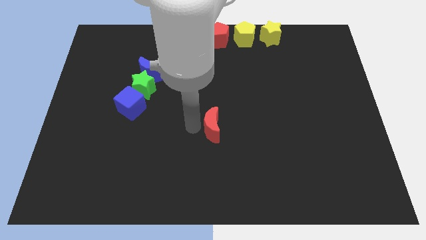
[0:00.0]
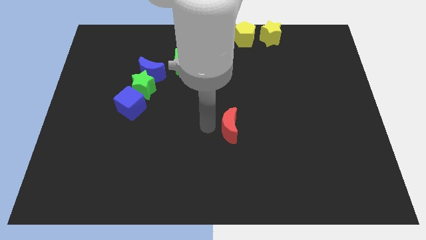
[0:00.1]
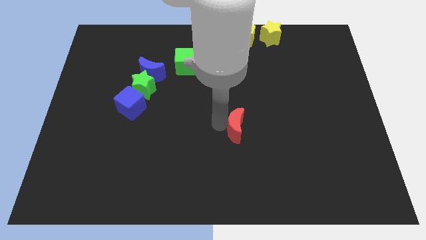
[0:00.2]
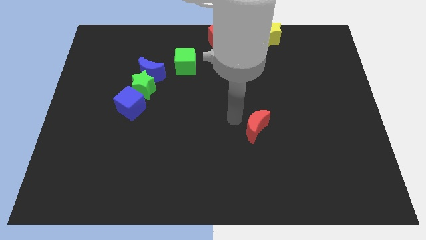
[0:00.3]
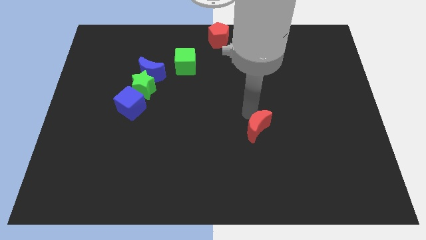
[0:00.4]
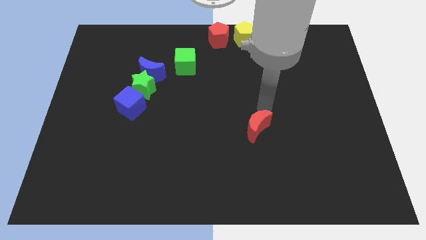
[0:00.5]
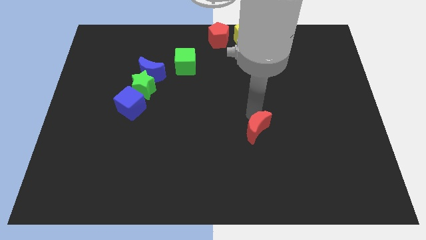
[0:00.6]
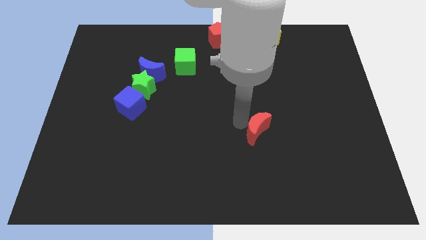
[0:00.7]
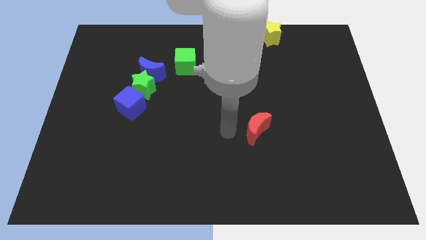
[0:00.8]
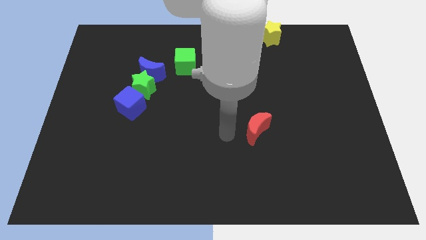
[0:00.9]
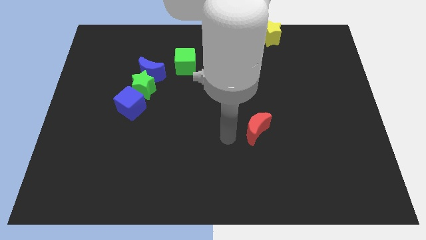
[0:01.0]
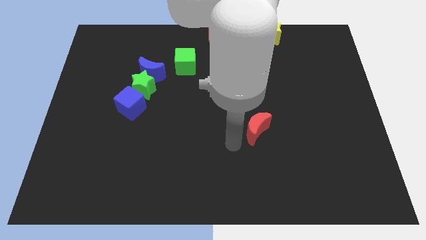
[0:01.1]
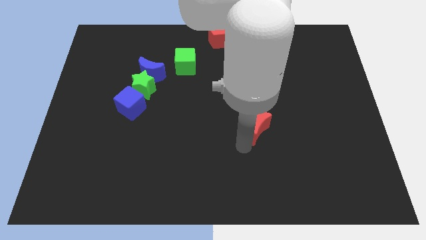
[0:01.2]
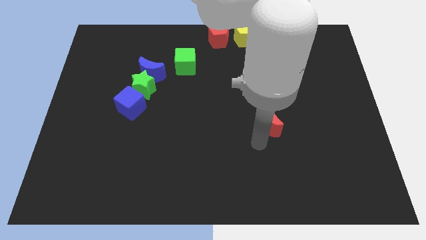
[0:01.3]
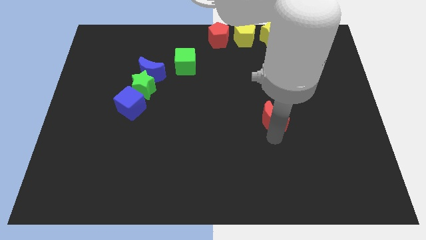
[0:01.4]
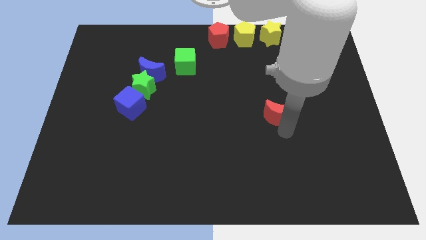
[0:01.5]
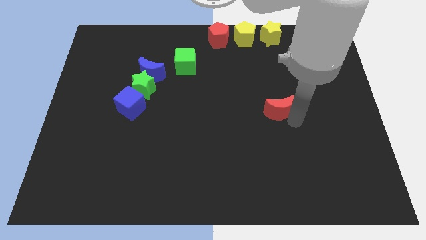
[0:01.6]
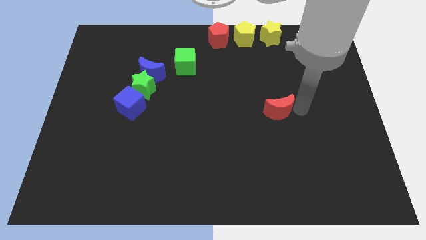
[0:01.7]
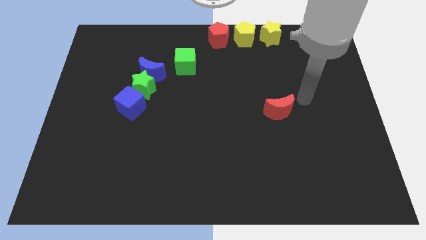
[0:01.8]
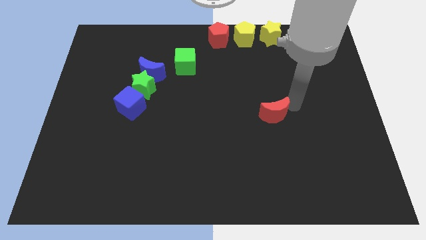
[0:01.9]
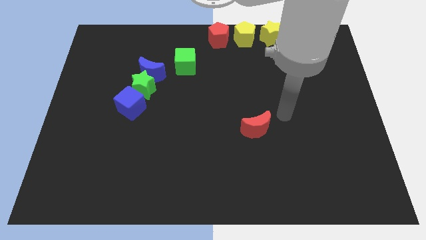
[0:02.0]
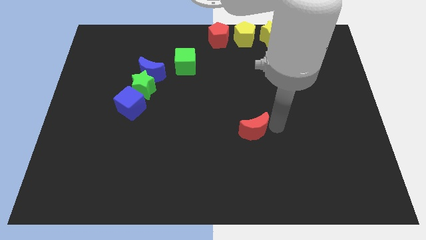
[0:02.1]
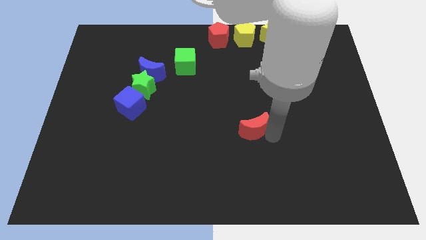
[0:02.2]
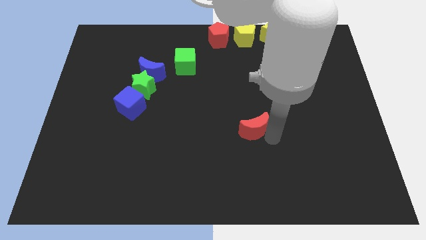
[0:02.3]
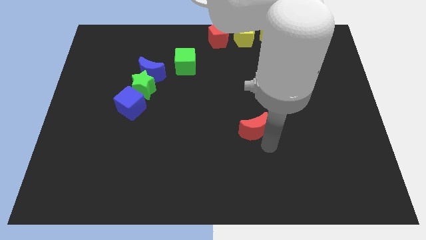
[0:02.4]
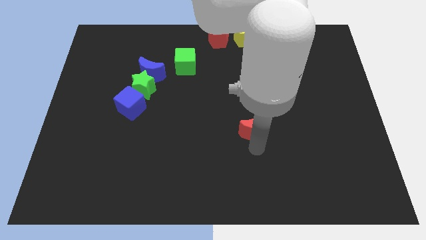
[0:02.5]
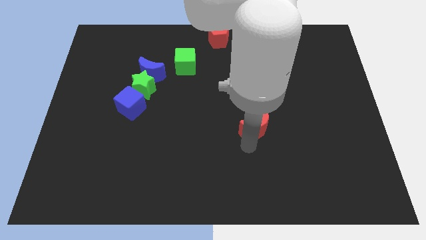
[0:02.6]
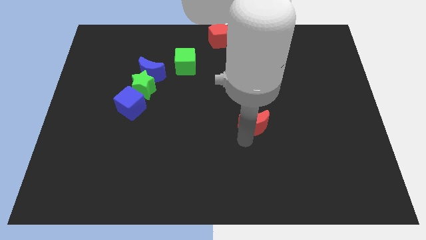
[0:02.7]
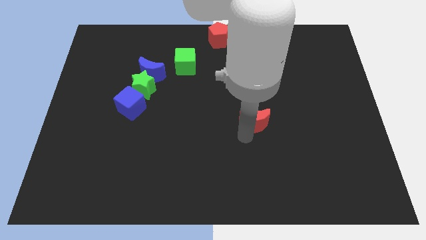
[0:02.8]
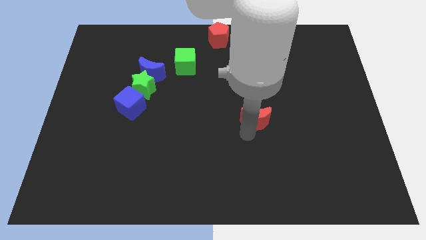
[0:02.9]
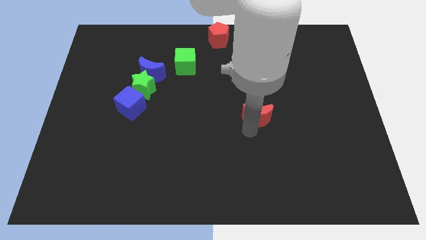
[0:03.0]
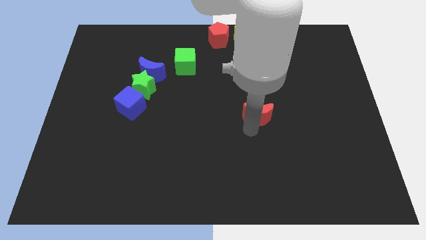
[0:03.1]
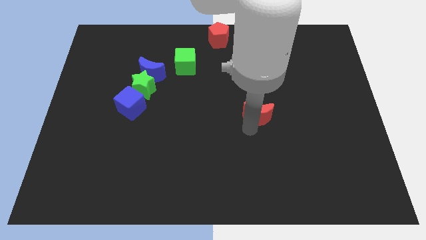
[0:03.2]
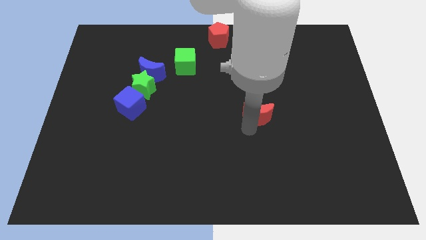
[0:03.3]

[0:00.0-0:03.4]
move the red moon horizontally to the right side of the blue cube

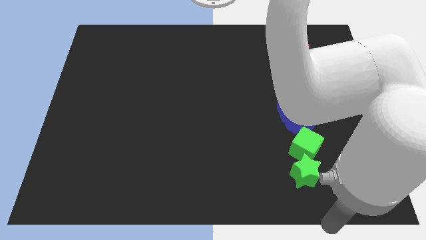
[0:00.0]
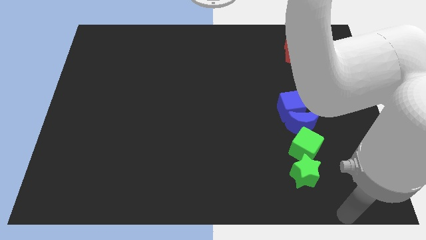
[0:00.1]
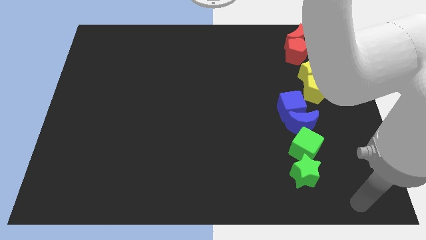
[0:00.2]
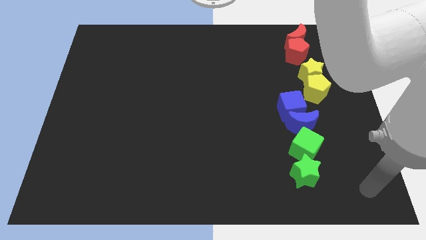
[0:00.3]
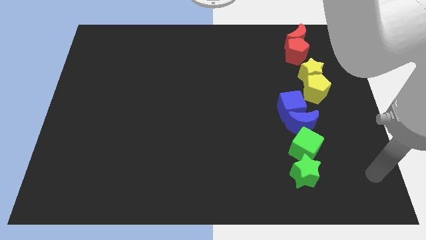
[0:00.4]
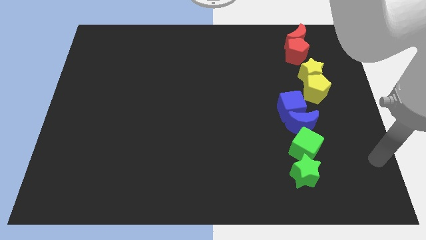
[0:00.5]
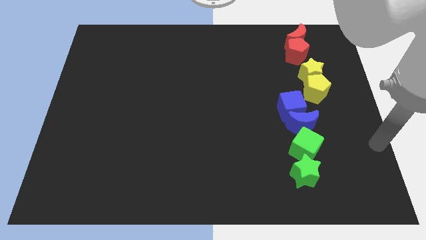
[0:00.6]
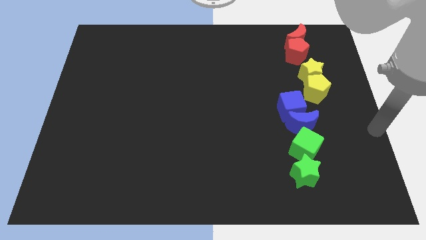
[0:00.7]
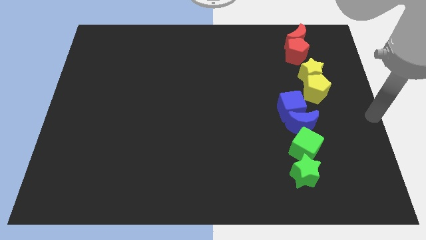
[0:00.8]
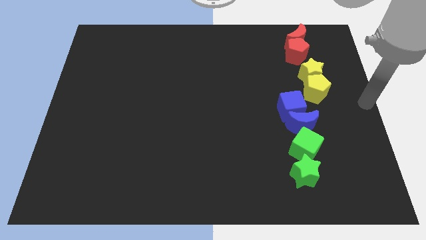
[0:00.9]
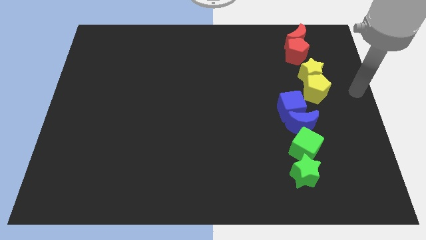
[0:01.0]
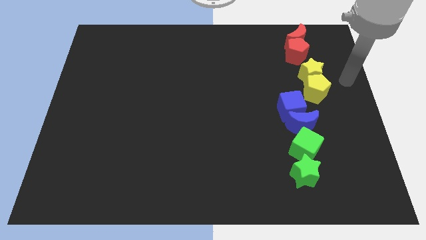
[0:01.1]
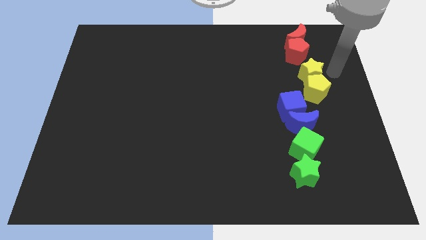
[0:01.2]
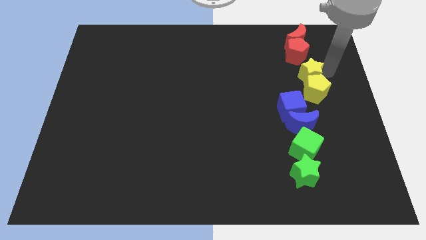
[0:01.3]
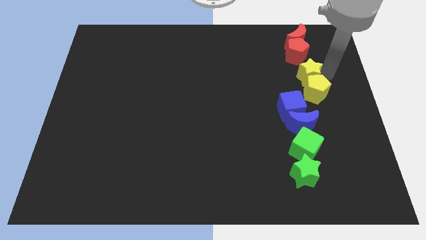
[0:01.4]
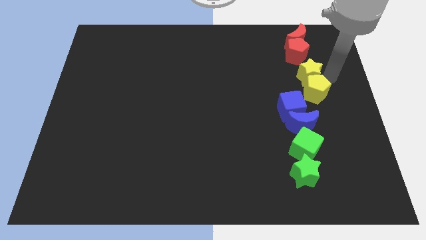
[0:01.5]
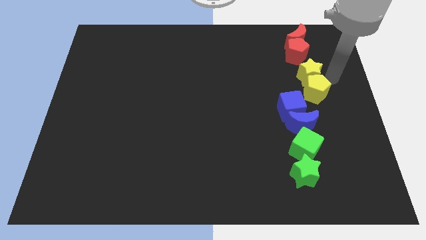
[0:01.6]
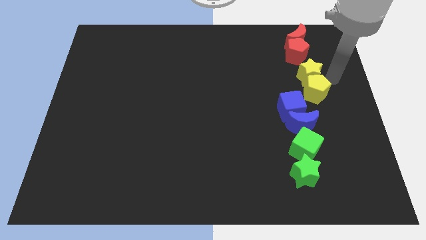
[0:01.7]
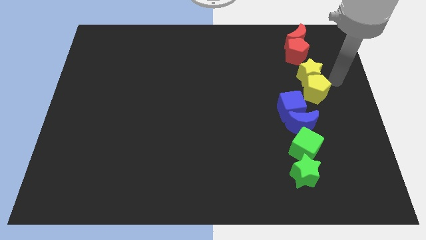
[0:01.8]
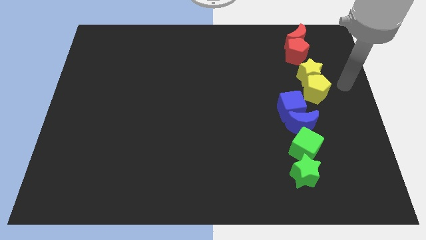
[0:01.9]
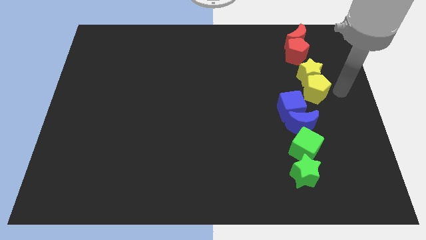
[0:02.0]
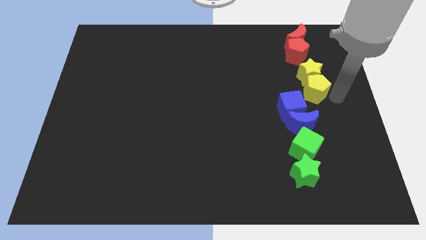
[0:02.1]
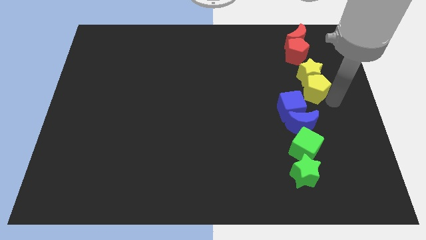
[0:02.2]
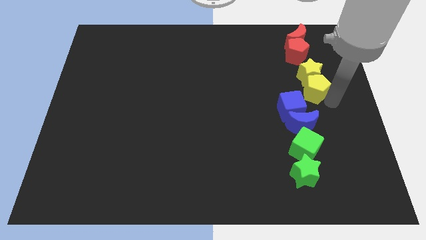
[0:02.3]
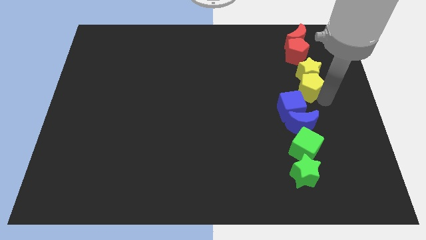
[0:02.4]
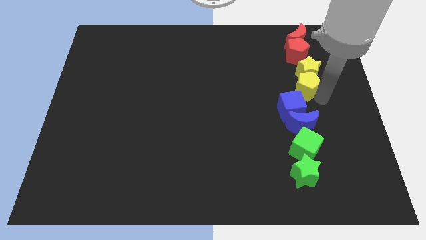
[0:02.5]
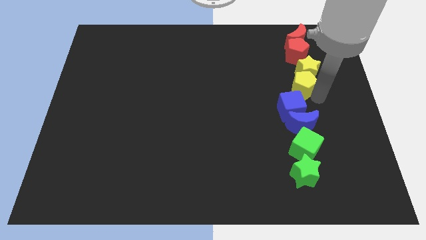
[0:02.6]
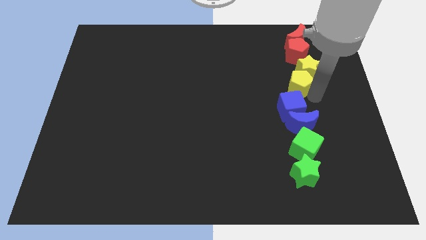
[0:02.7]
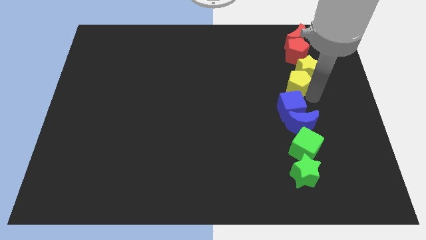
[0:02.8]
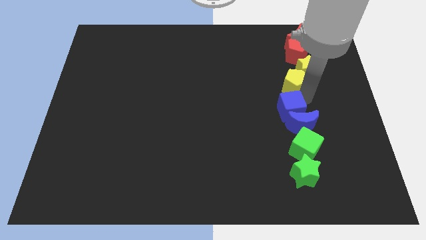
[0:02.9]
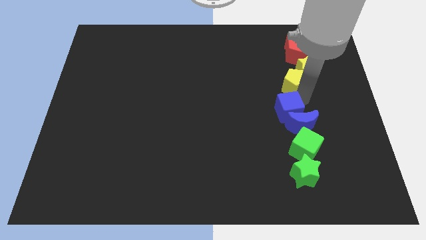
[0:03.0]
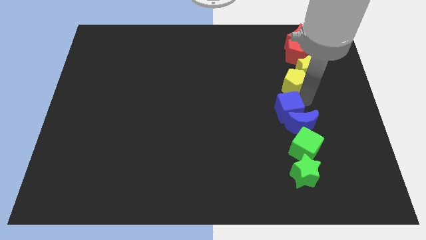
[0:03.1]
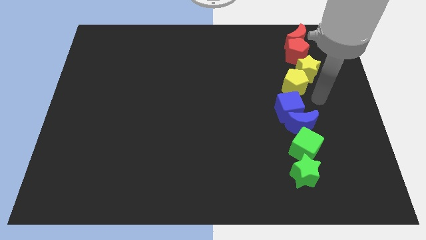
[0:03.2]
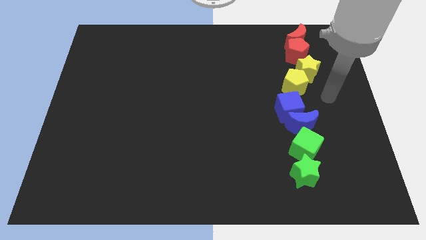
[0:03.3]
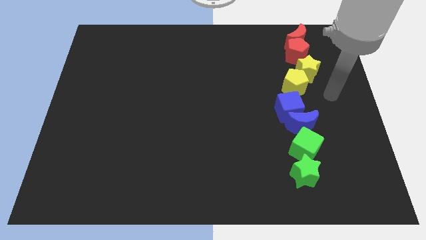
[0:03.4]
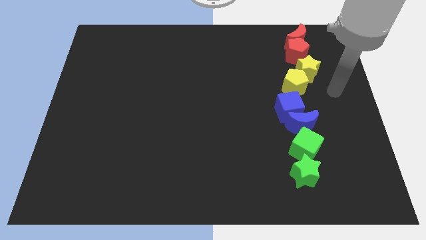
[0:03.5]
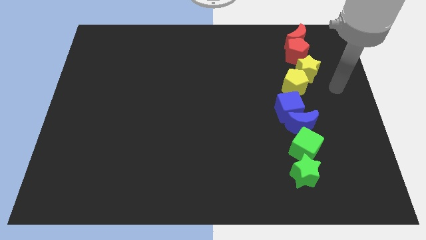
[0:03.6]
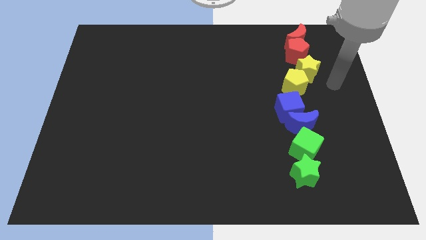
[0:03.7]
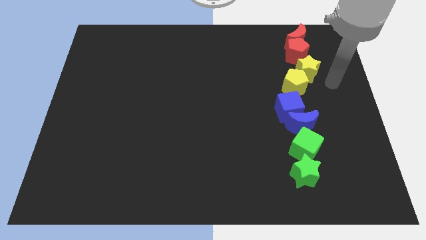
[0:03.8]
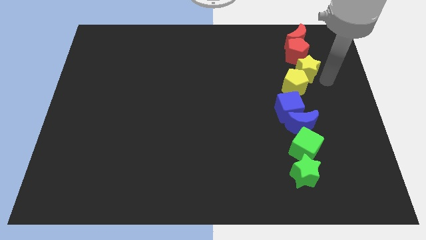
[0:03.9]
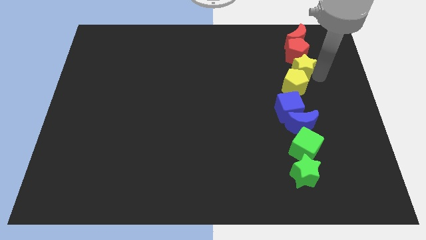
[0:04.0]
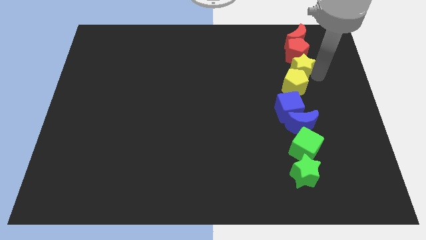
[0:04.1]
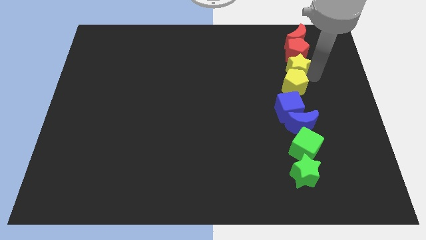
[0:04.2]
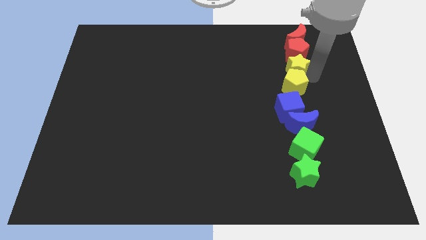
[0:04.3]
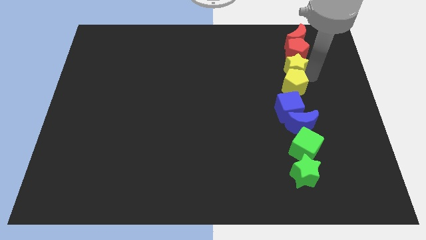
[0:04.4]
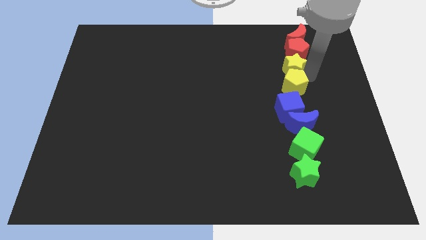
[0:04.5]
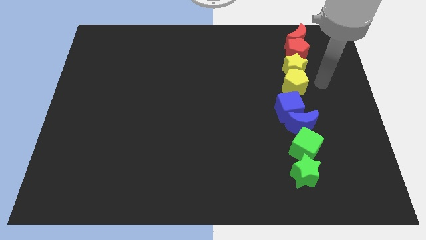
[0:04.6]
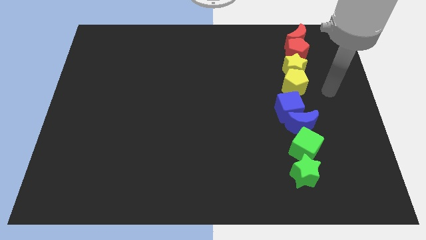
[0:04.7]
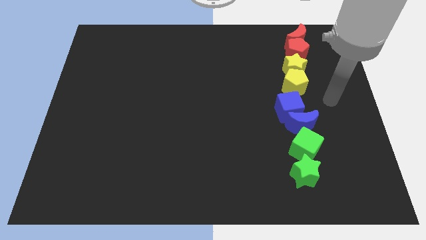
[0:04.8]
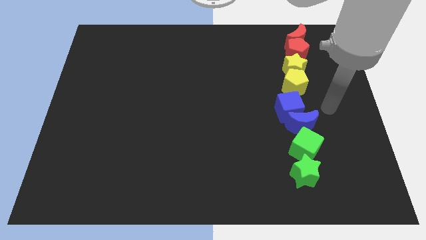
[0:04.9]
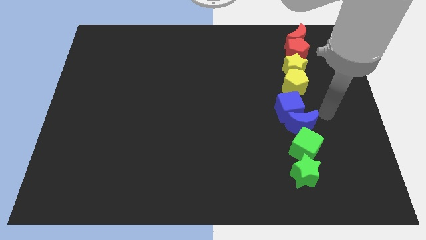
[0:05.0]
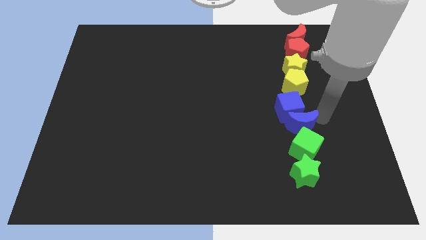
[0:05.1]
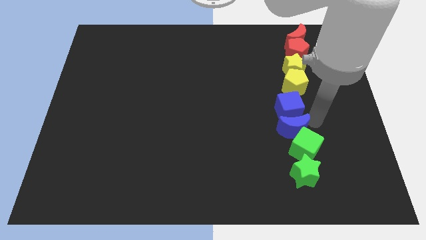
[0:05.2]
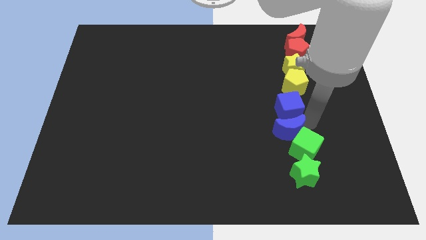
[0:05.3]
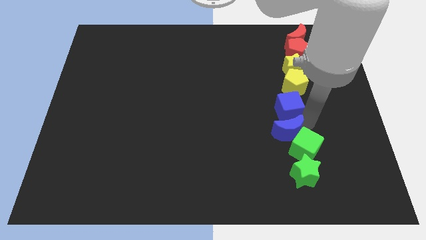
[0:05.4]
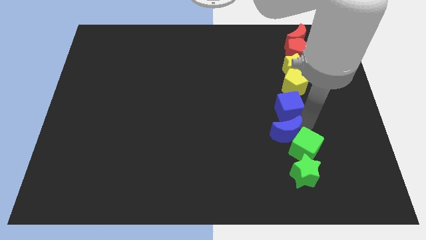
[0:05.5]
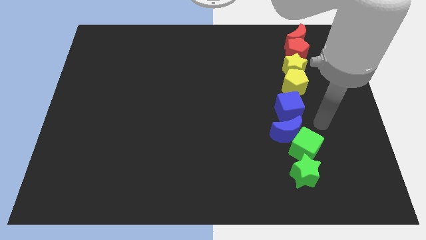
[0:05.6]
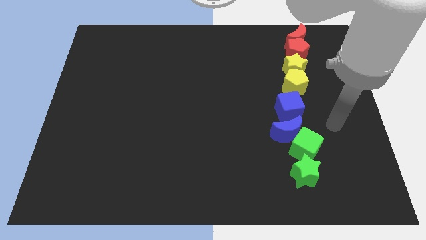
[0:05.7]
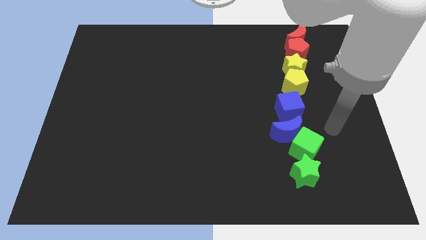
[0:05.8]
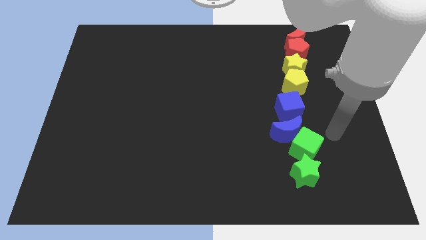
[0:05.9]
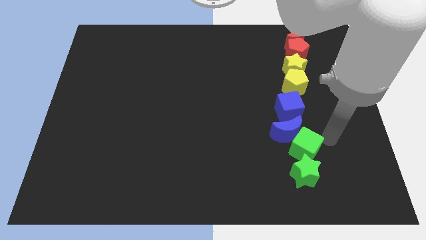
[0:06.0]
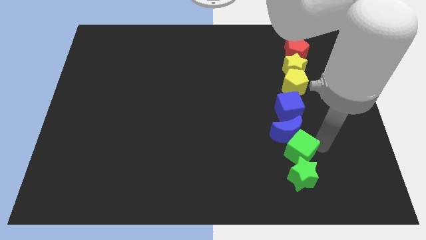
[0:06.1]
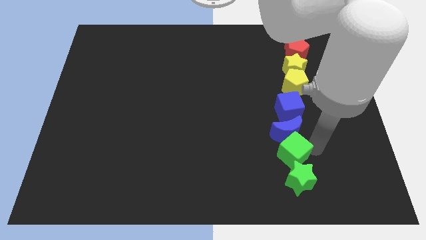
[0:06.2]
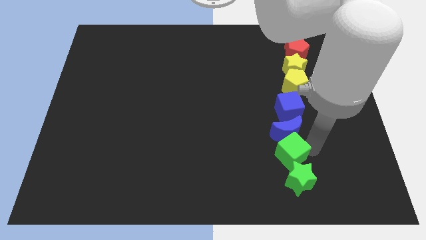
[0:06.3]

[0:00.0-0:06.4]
push slightly the yellow blocks blue blocks and green blocks towards the left side of the table
